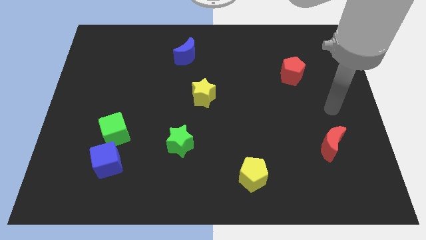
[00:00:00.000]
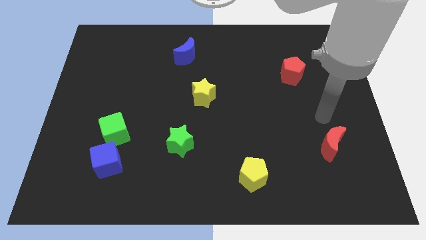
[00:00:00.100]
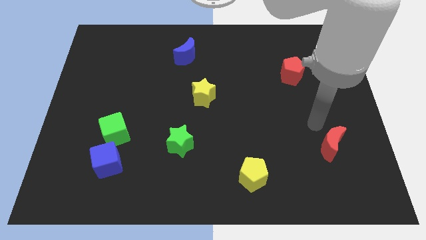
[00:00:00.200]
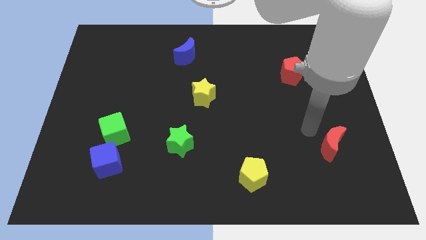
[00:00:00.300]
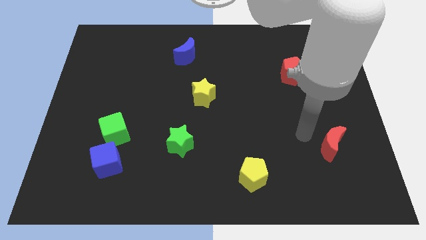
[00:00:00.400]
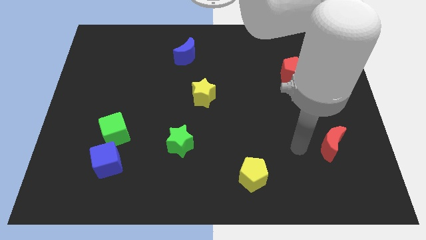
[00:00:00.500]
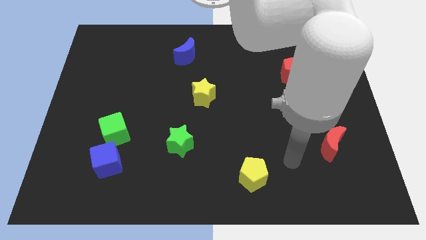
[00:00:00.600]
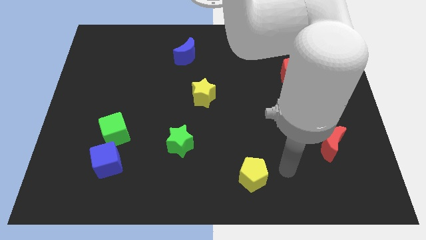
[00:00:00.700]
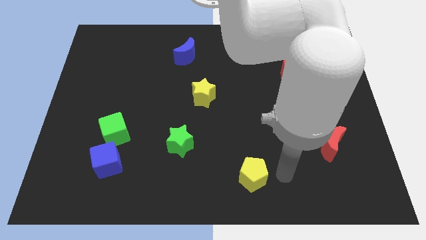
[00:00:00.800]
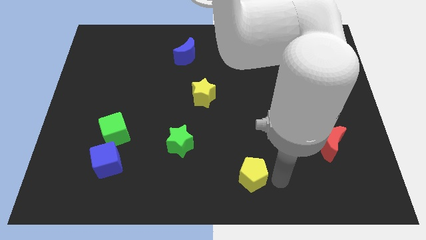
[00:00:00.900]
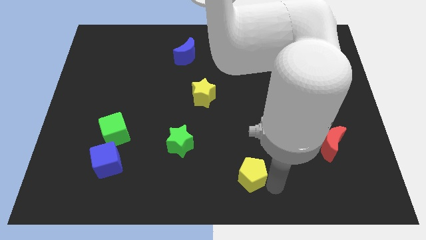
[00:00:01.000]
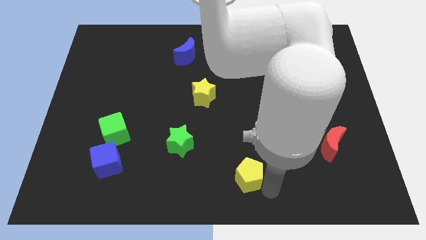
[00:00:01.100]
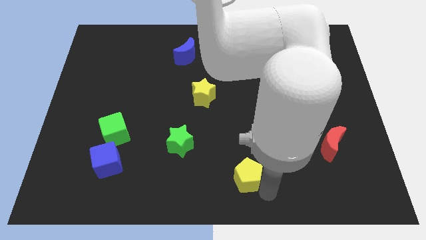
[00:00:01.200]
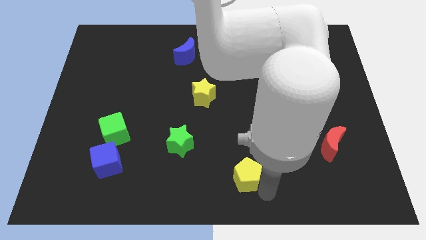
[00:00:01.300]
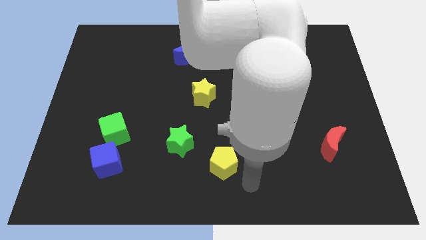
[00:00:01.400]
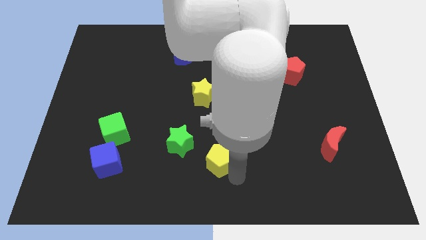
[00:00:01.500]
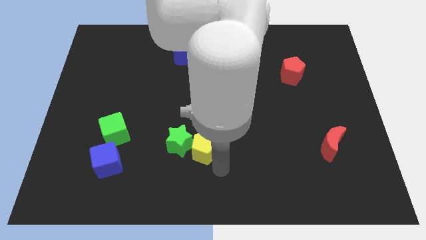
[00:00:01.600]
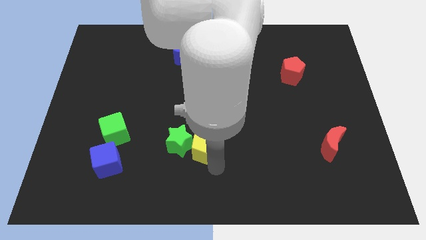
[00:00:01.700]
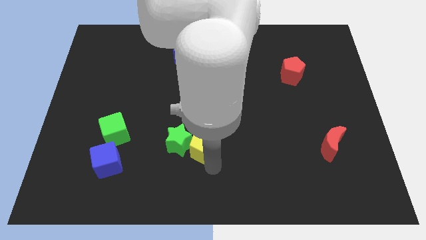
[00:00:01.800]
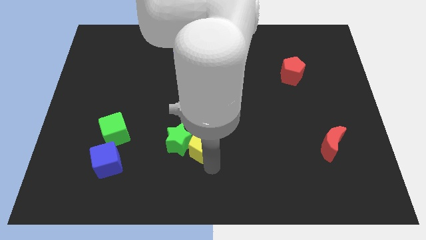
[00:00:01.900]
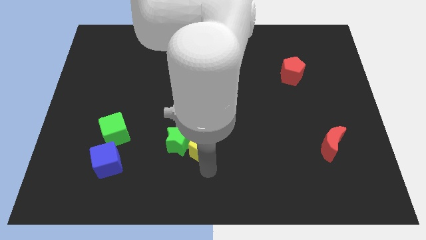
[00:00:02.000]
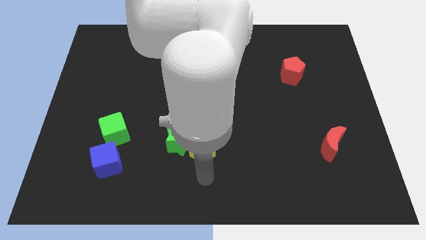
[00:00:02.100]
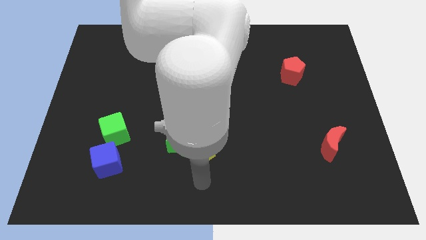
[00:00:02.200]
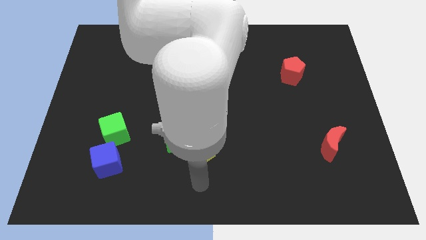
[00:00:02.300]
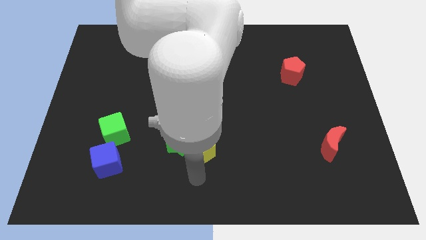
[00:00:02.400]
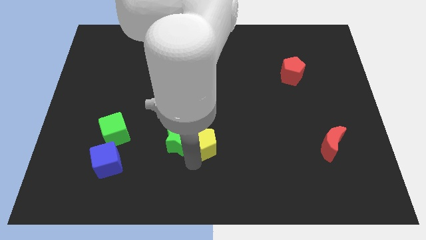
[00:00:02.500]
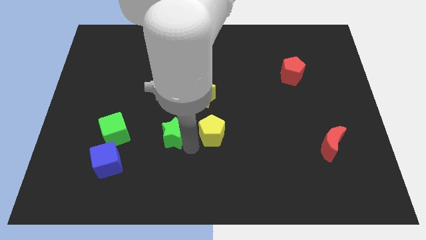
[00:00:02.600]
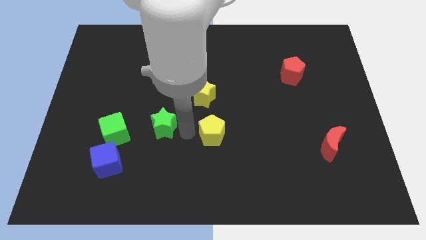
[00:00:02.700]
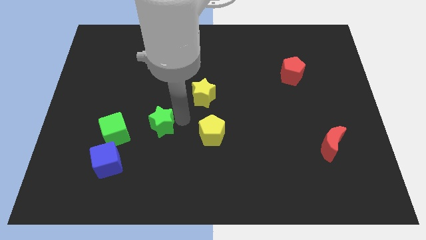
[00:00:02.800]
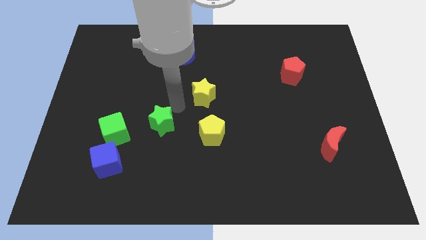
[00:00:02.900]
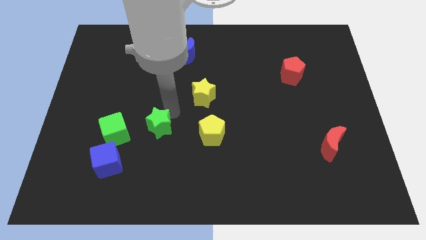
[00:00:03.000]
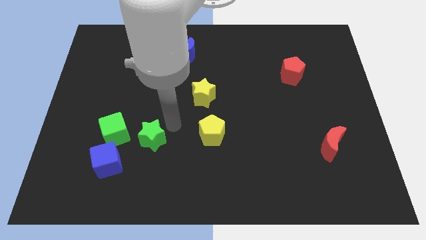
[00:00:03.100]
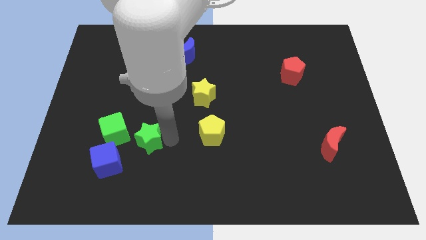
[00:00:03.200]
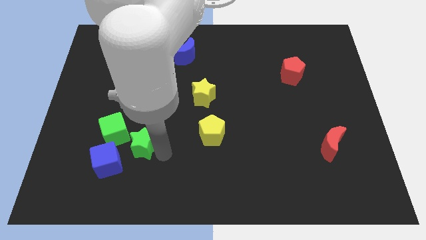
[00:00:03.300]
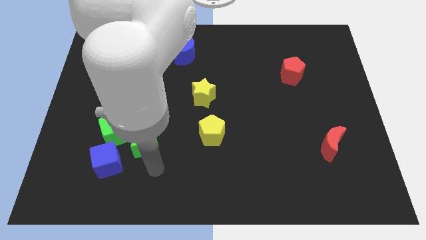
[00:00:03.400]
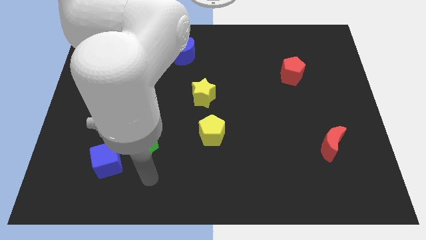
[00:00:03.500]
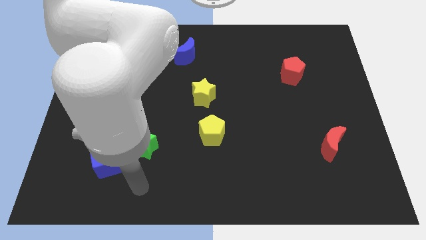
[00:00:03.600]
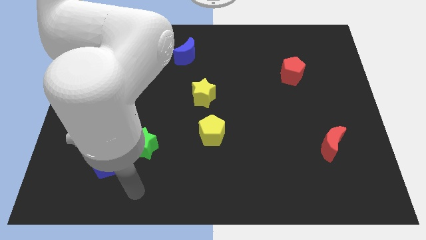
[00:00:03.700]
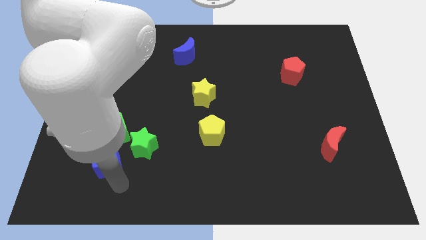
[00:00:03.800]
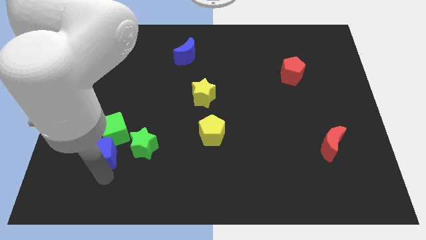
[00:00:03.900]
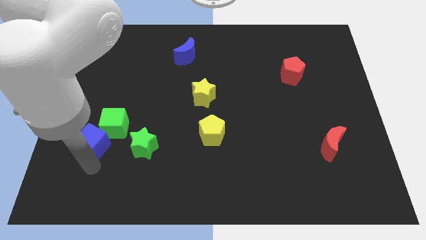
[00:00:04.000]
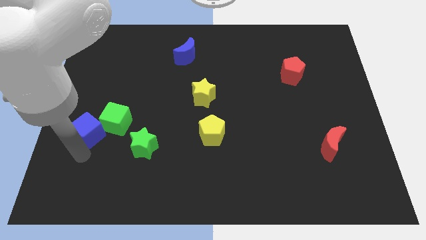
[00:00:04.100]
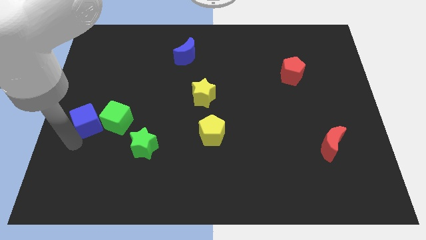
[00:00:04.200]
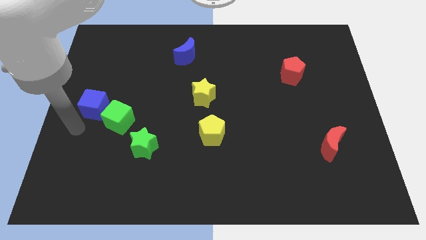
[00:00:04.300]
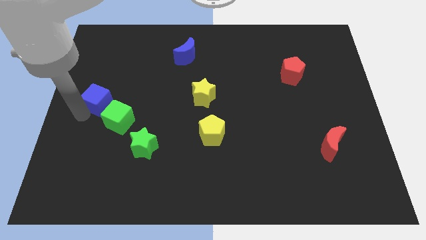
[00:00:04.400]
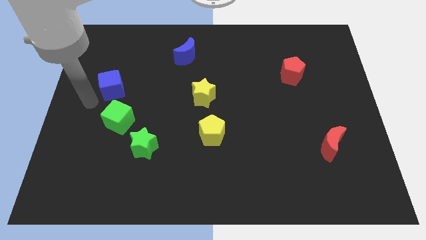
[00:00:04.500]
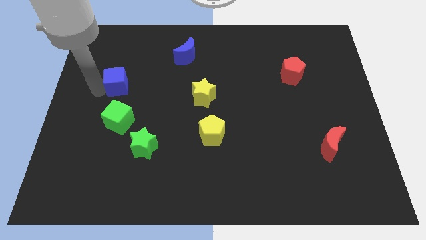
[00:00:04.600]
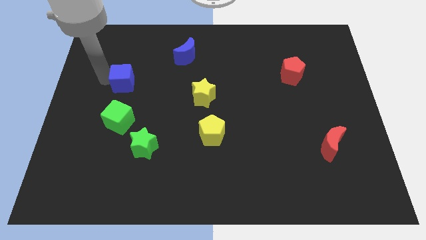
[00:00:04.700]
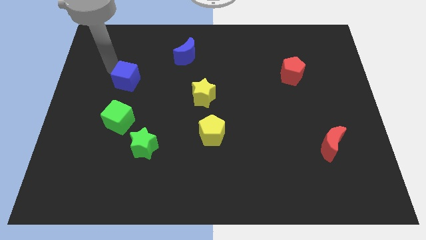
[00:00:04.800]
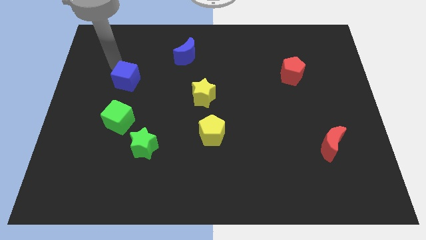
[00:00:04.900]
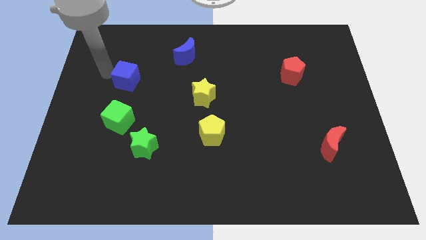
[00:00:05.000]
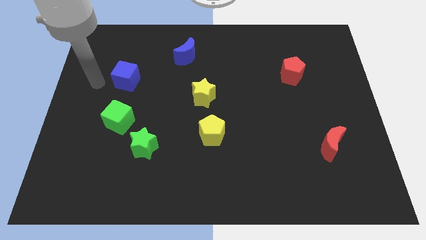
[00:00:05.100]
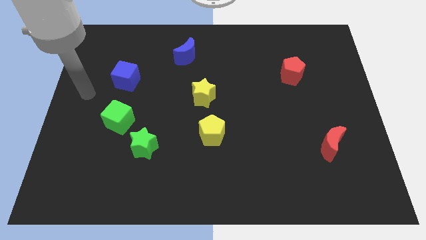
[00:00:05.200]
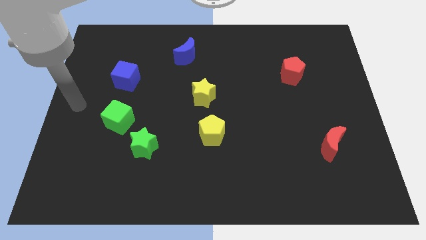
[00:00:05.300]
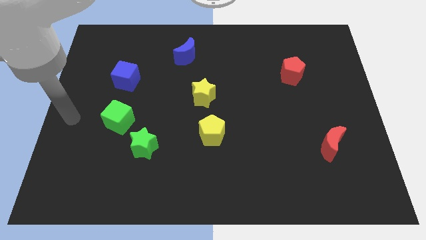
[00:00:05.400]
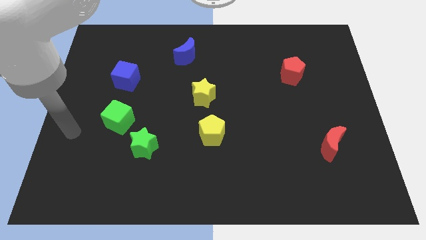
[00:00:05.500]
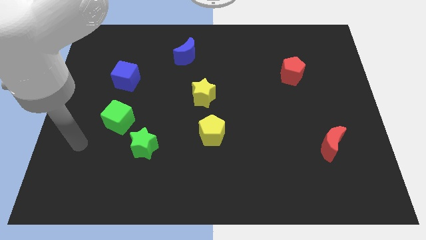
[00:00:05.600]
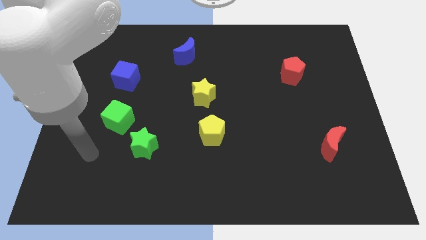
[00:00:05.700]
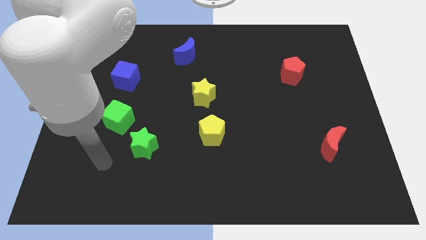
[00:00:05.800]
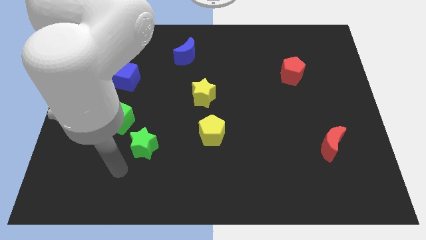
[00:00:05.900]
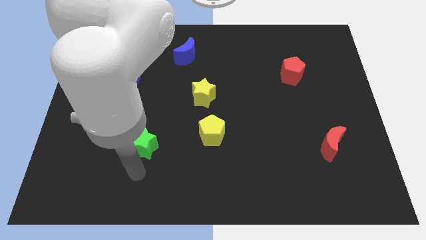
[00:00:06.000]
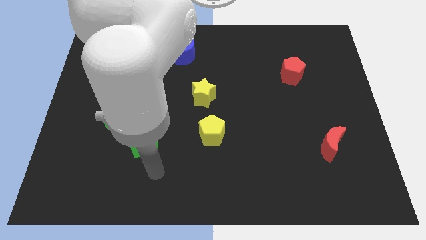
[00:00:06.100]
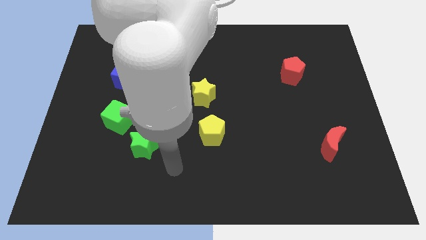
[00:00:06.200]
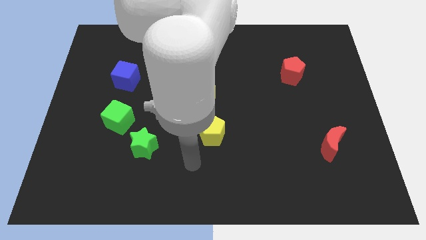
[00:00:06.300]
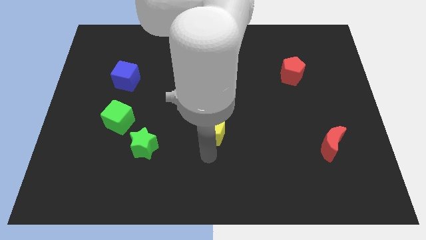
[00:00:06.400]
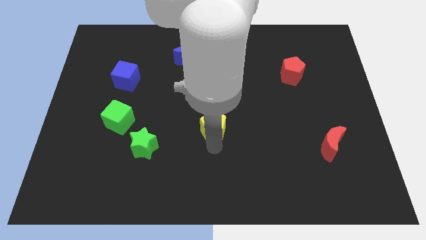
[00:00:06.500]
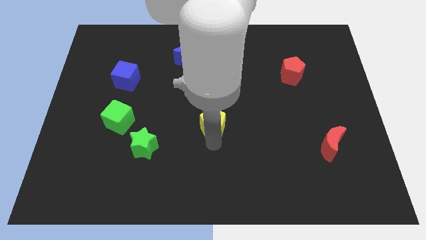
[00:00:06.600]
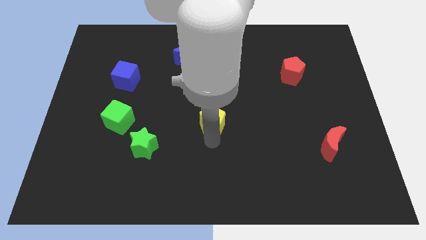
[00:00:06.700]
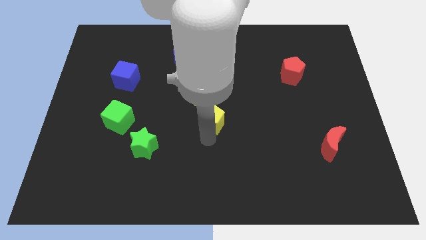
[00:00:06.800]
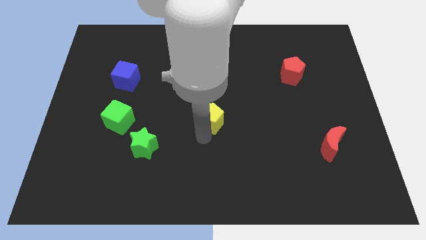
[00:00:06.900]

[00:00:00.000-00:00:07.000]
disturb all the blocks by moving the arm between them

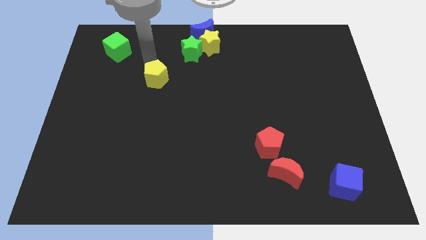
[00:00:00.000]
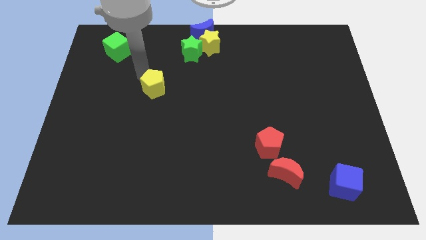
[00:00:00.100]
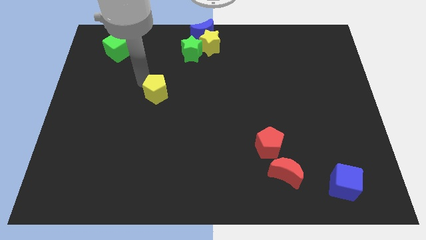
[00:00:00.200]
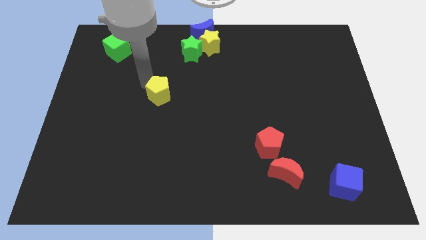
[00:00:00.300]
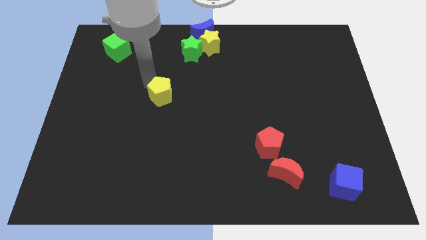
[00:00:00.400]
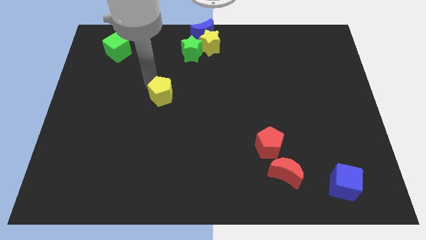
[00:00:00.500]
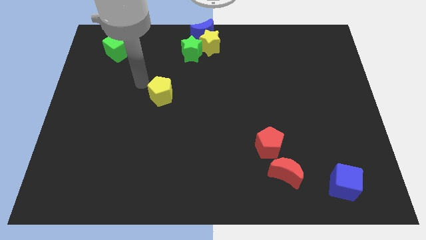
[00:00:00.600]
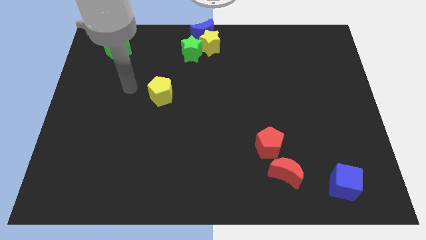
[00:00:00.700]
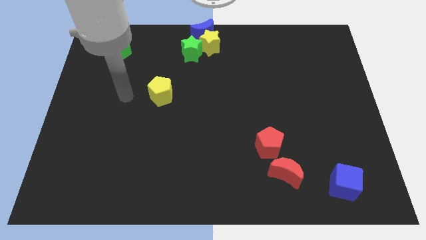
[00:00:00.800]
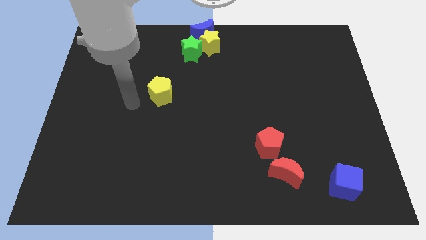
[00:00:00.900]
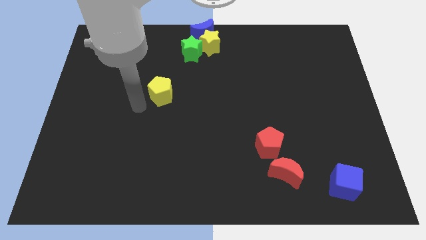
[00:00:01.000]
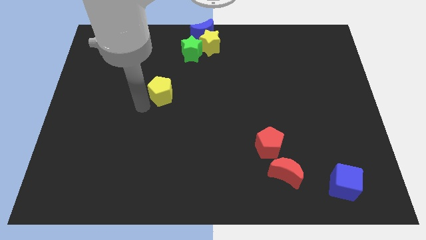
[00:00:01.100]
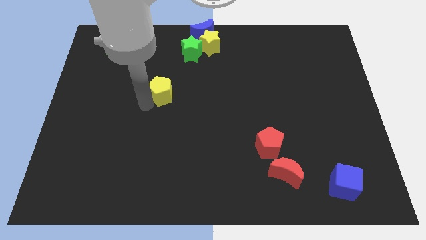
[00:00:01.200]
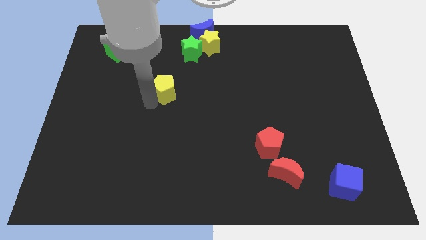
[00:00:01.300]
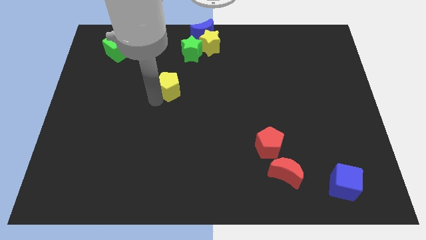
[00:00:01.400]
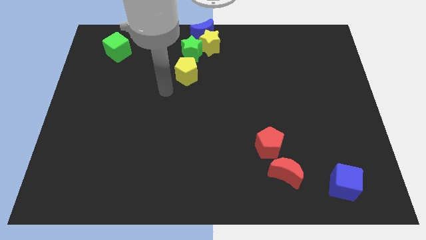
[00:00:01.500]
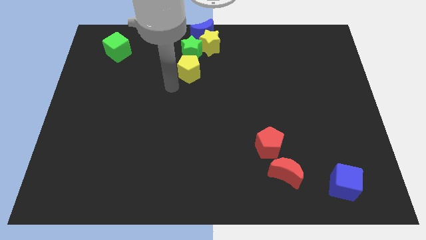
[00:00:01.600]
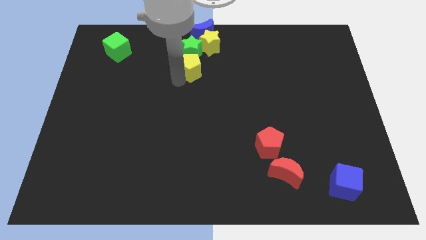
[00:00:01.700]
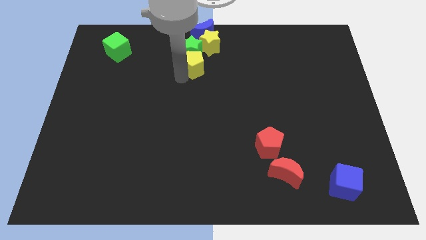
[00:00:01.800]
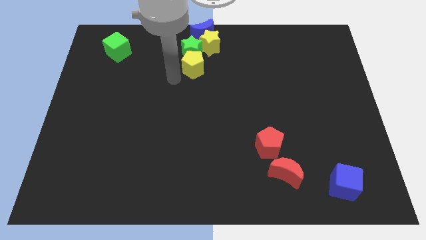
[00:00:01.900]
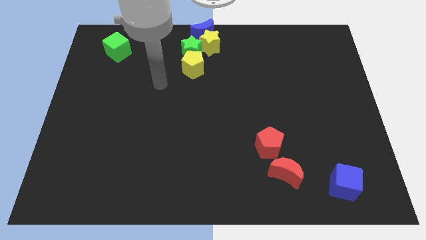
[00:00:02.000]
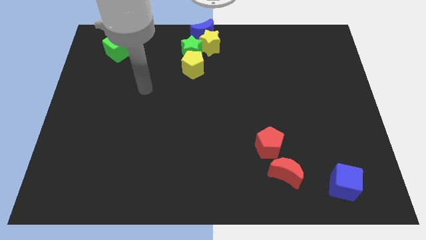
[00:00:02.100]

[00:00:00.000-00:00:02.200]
push the yellow pentagon to the bottom side of the green star
